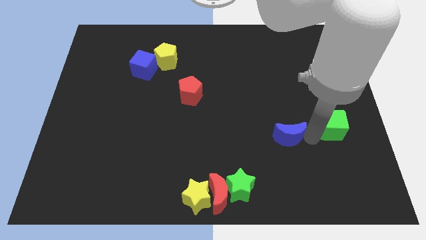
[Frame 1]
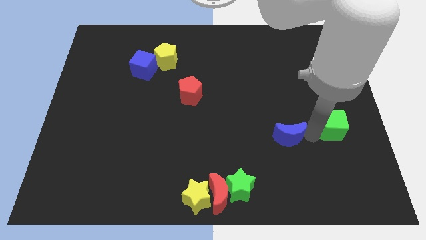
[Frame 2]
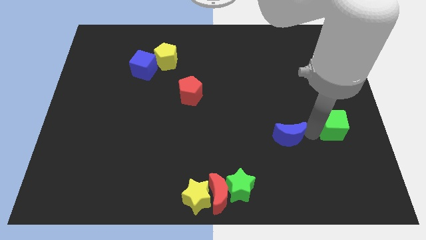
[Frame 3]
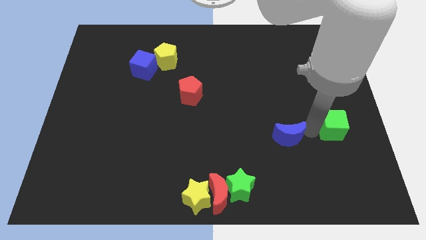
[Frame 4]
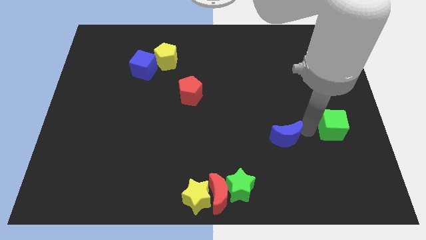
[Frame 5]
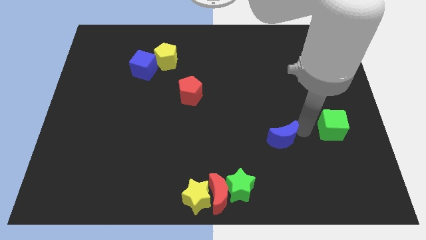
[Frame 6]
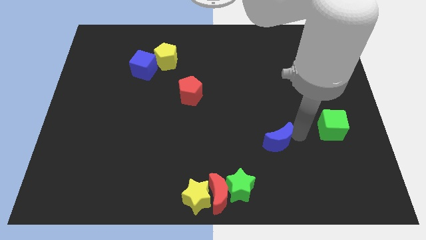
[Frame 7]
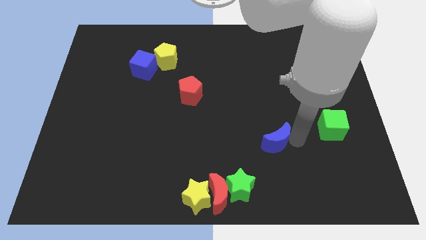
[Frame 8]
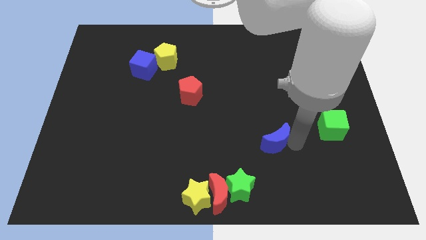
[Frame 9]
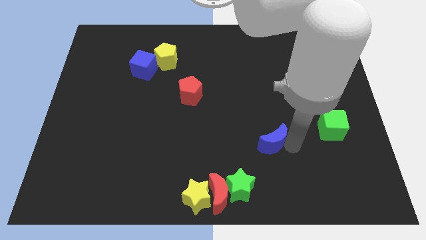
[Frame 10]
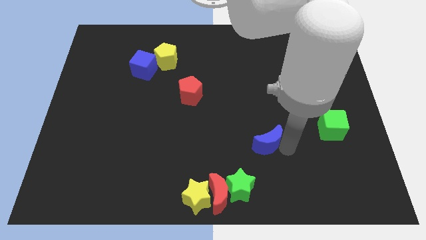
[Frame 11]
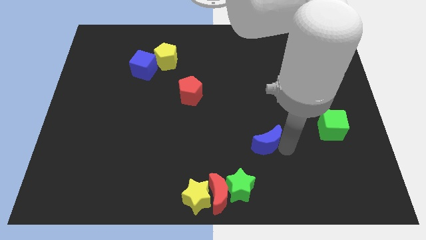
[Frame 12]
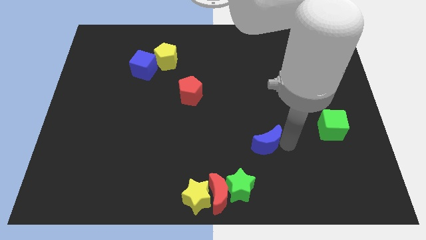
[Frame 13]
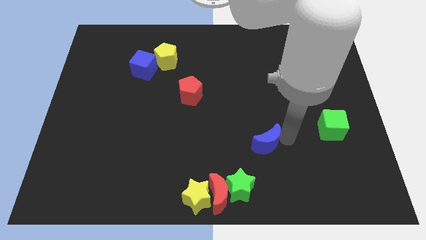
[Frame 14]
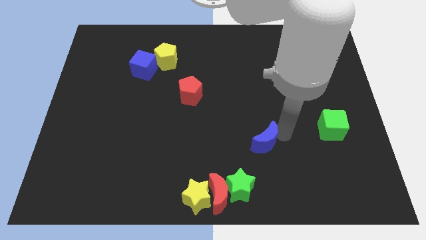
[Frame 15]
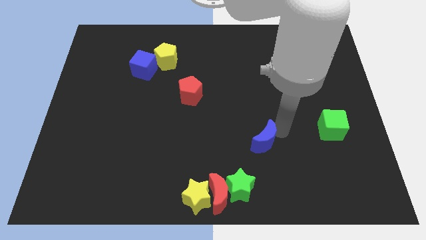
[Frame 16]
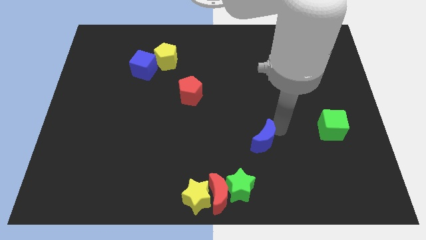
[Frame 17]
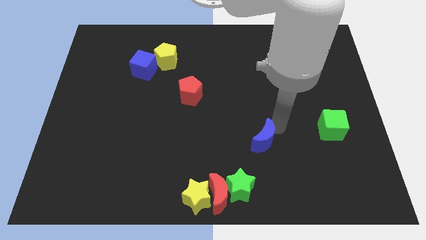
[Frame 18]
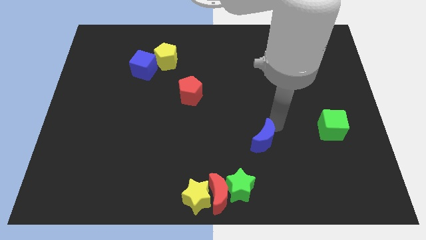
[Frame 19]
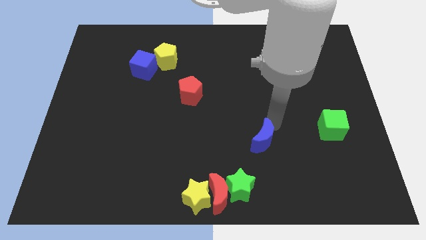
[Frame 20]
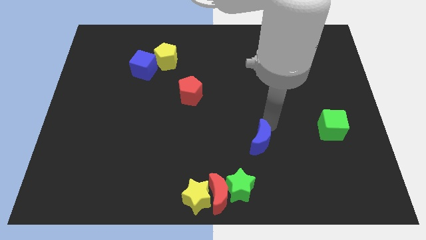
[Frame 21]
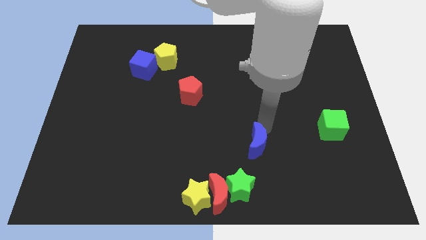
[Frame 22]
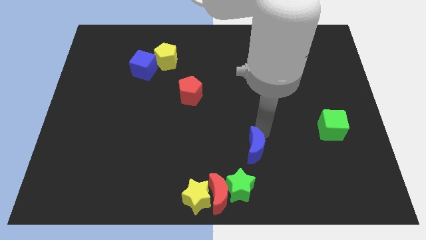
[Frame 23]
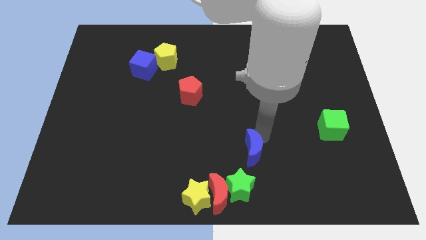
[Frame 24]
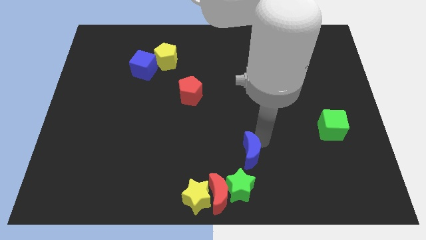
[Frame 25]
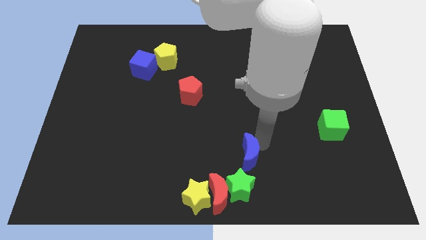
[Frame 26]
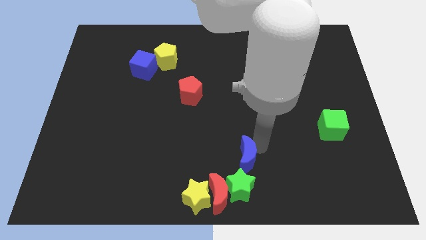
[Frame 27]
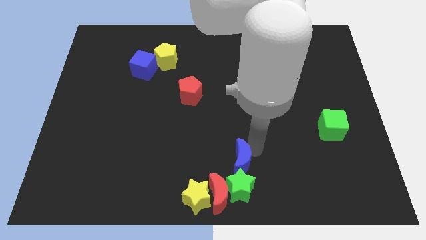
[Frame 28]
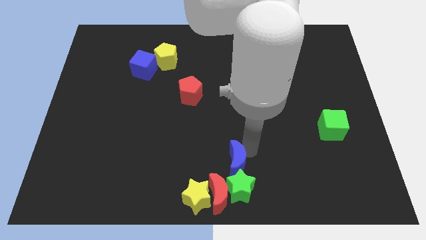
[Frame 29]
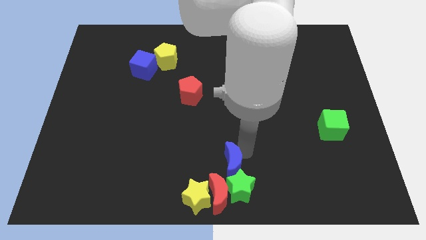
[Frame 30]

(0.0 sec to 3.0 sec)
move the blue moon to the top side of the green star

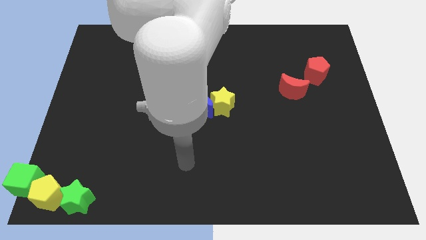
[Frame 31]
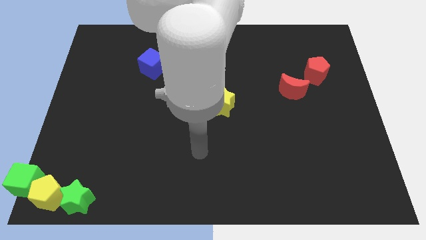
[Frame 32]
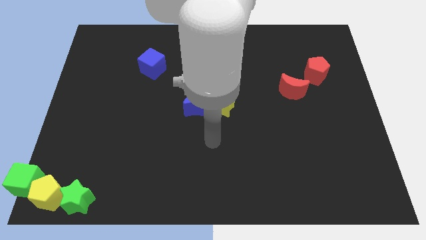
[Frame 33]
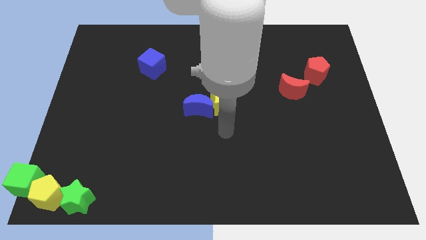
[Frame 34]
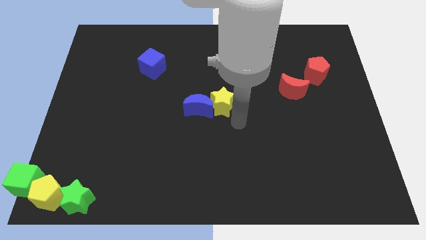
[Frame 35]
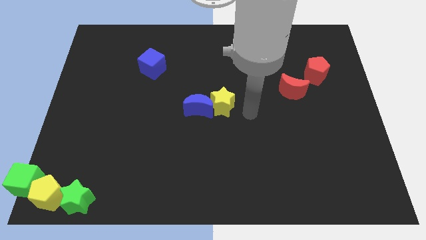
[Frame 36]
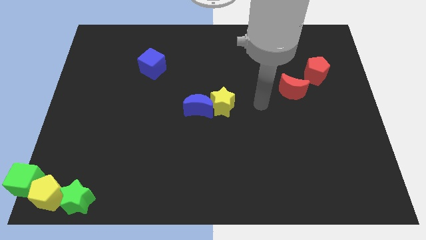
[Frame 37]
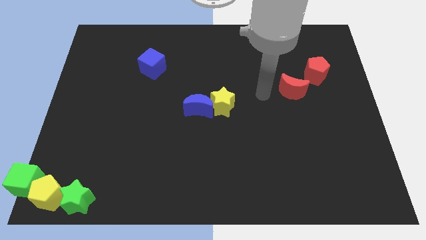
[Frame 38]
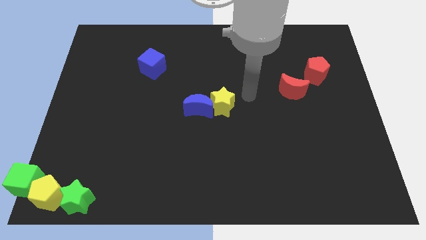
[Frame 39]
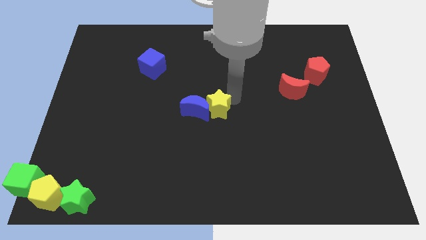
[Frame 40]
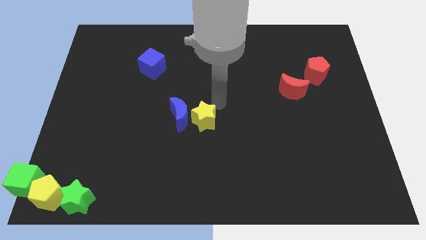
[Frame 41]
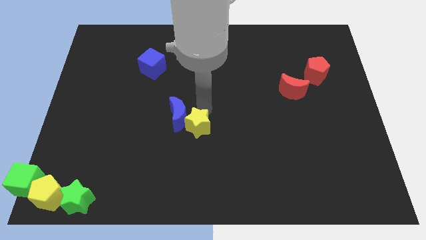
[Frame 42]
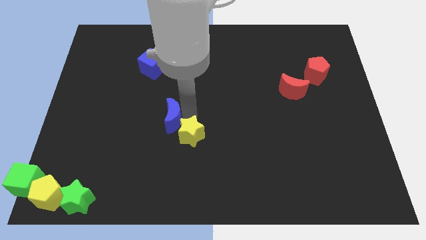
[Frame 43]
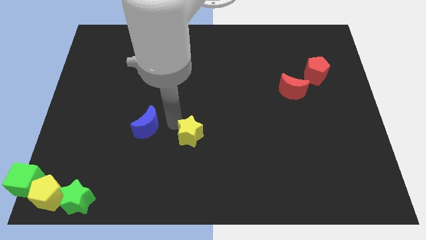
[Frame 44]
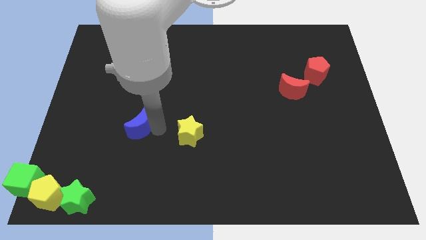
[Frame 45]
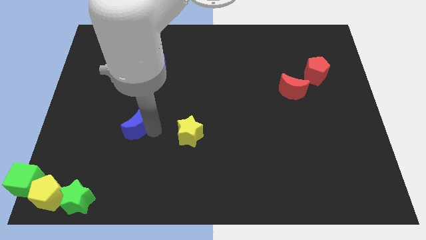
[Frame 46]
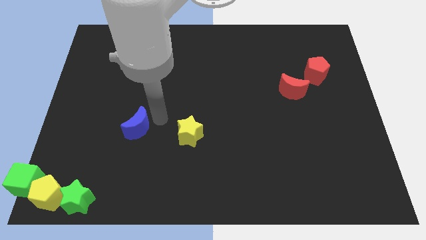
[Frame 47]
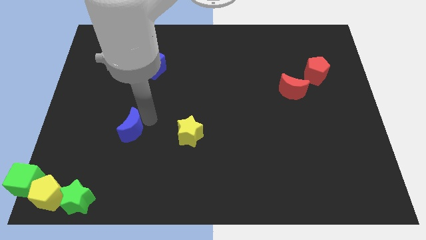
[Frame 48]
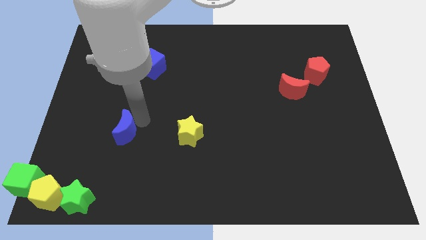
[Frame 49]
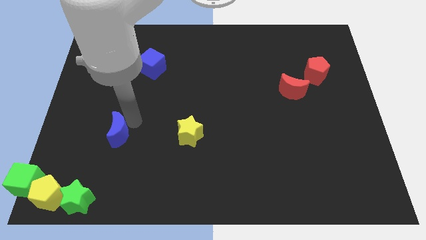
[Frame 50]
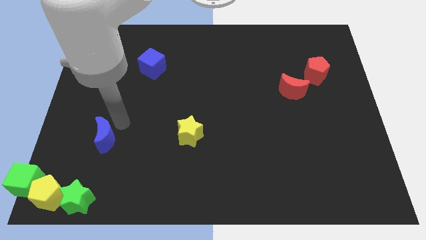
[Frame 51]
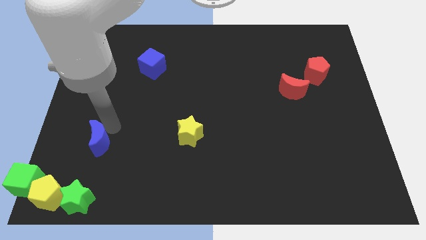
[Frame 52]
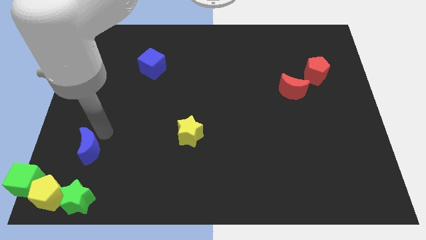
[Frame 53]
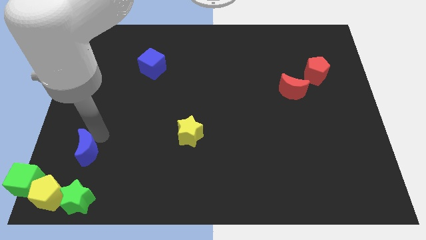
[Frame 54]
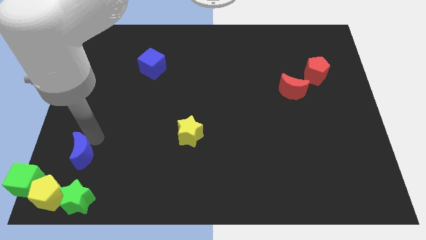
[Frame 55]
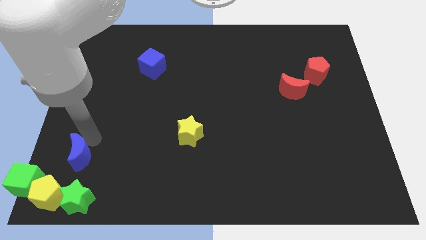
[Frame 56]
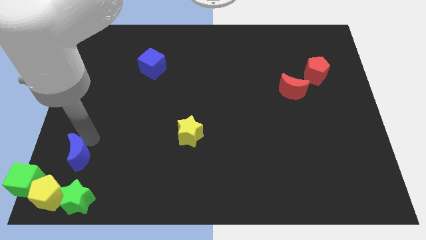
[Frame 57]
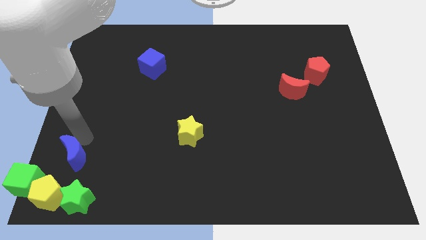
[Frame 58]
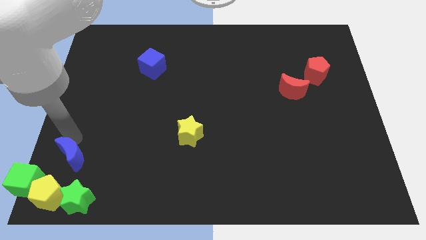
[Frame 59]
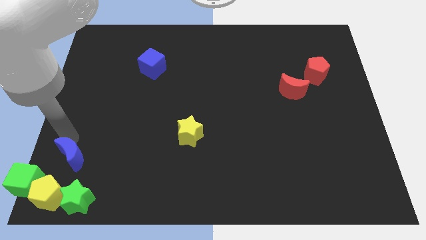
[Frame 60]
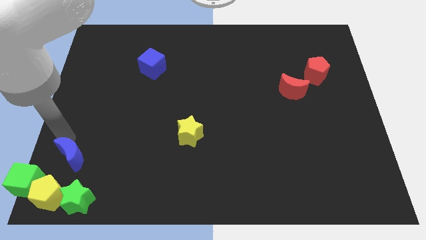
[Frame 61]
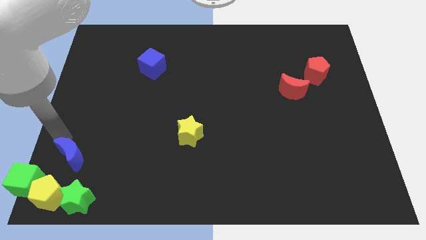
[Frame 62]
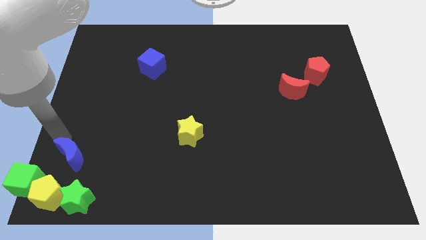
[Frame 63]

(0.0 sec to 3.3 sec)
separate the blue crescent from the yellow star

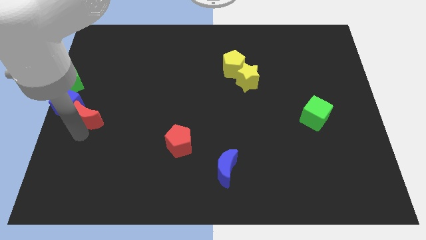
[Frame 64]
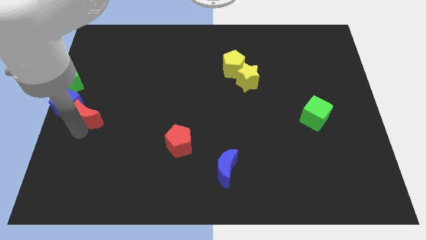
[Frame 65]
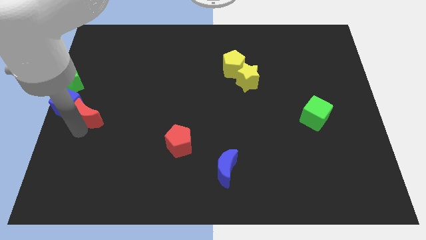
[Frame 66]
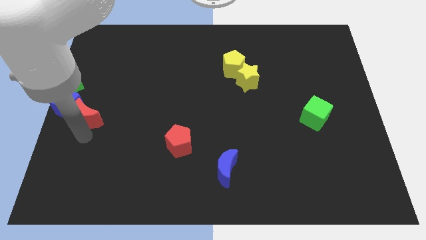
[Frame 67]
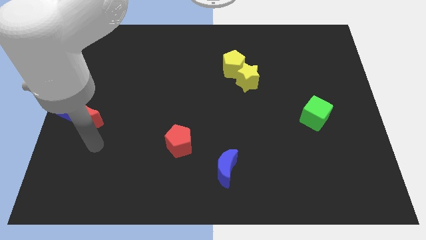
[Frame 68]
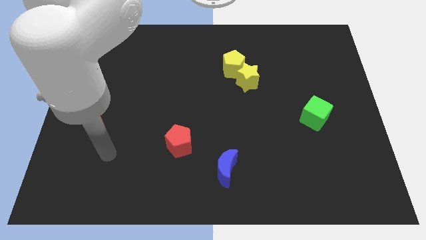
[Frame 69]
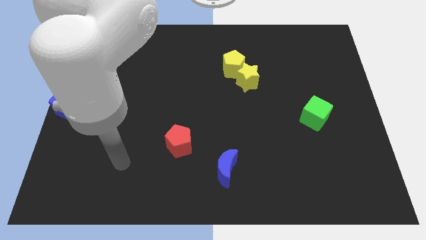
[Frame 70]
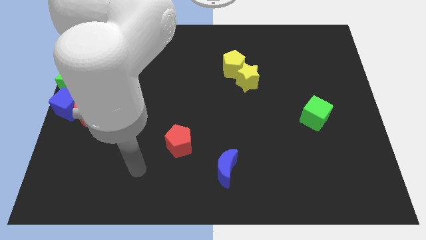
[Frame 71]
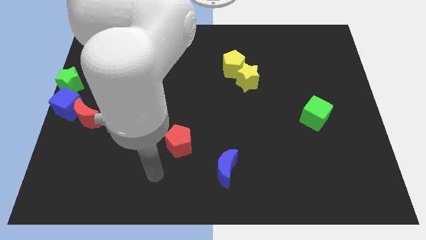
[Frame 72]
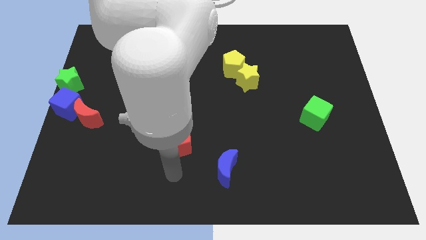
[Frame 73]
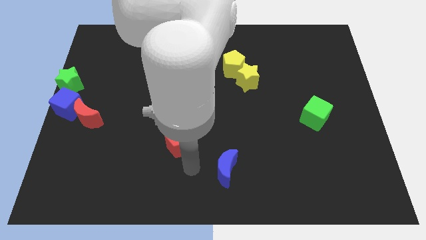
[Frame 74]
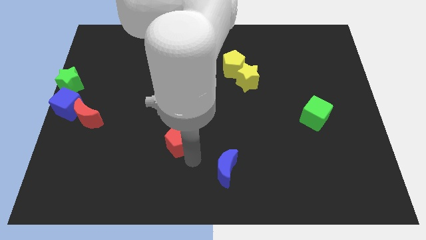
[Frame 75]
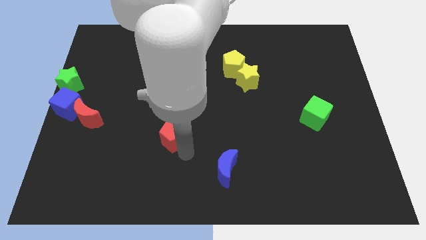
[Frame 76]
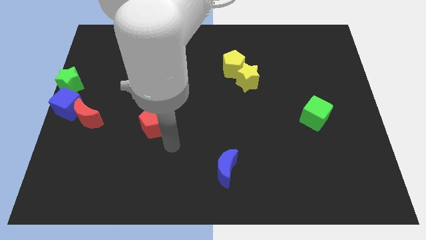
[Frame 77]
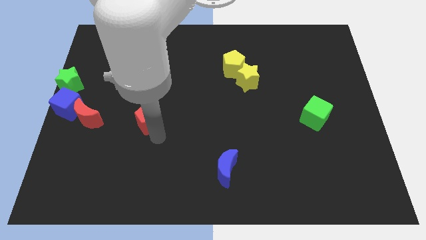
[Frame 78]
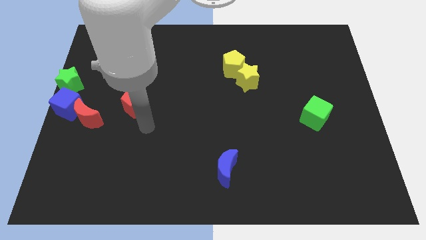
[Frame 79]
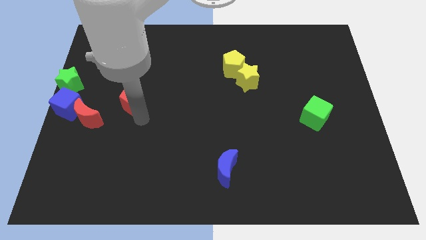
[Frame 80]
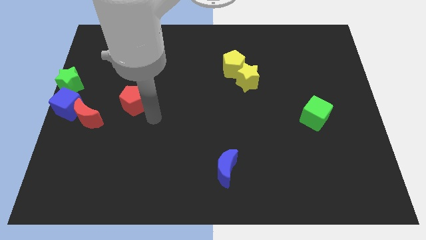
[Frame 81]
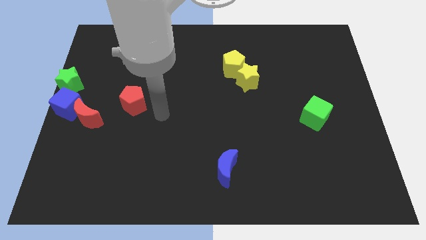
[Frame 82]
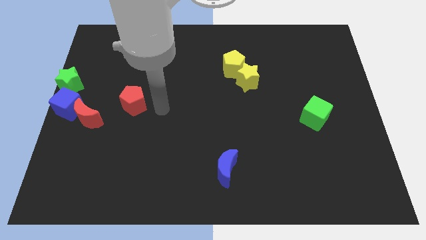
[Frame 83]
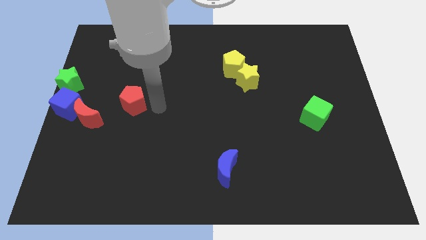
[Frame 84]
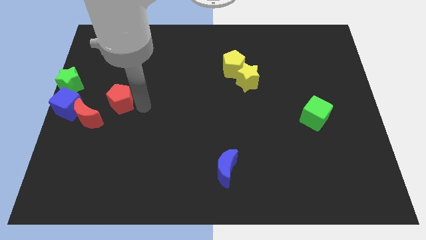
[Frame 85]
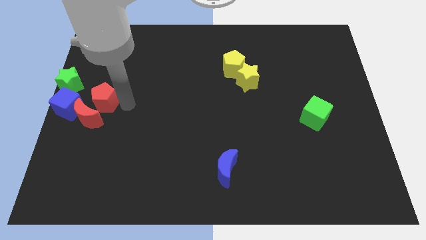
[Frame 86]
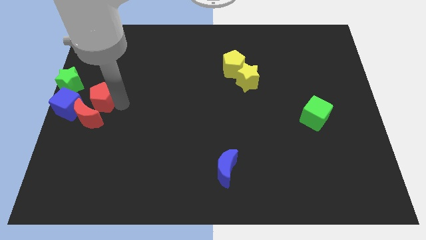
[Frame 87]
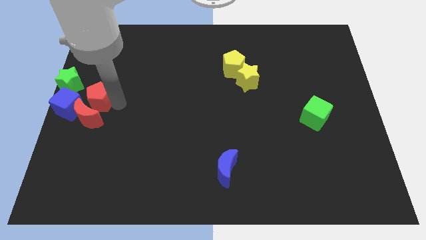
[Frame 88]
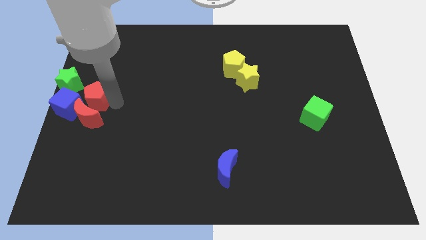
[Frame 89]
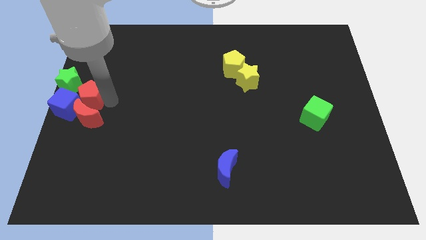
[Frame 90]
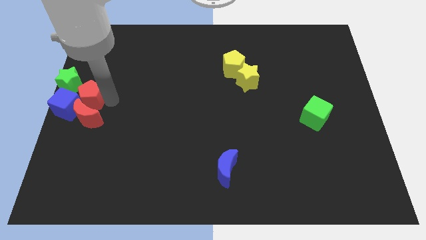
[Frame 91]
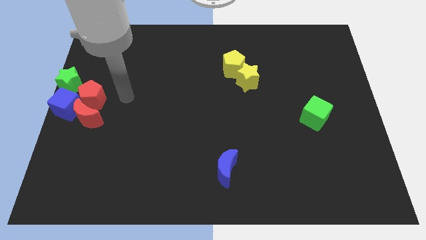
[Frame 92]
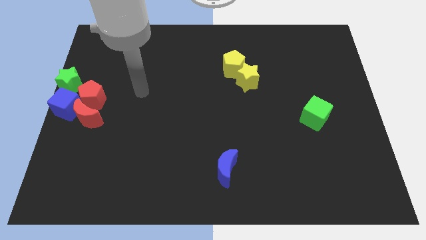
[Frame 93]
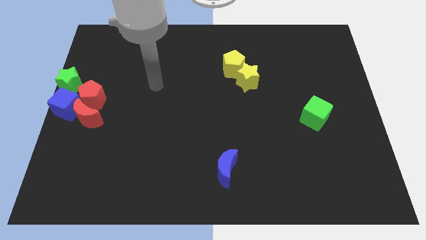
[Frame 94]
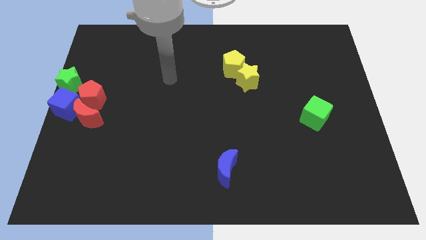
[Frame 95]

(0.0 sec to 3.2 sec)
place the red pentagon beside the green star
